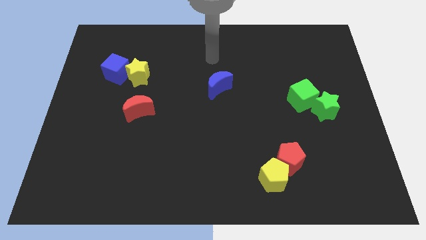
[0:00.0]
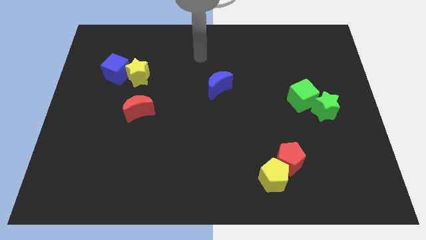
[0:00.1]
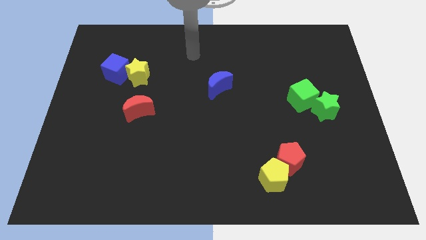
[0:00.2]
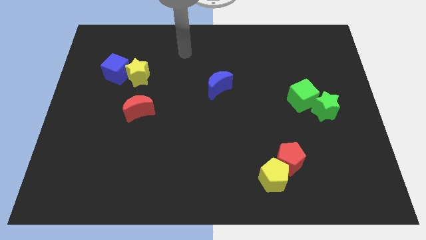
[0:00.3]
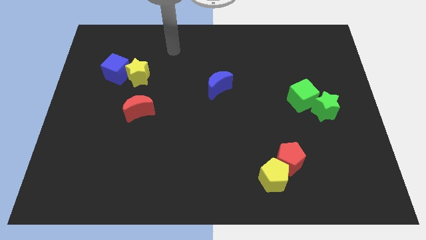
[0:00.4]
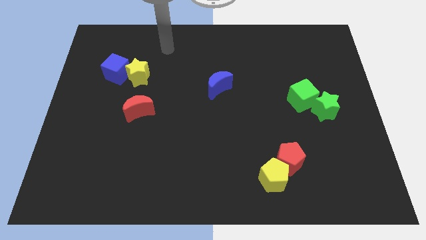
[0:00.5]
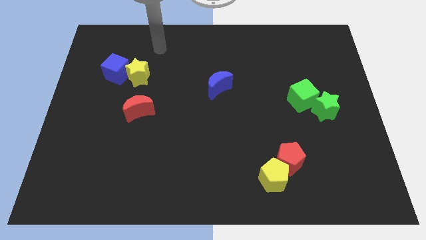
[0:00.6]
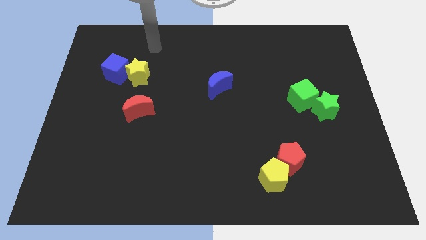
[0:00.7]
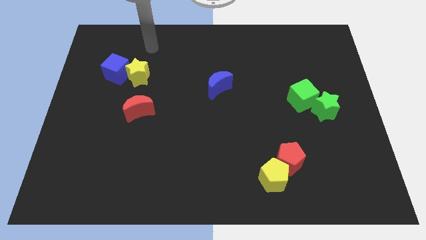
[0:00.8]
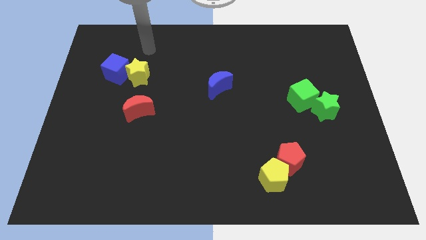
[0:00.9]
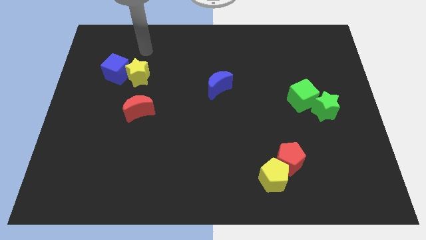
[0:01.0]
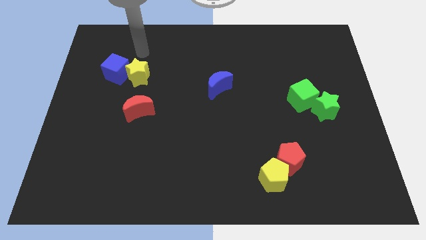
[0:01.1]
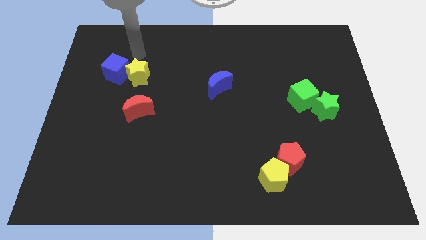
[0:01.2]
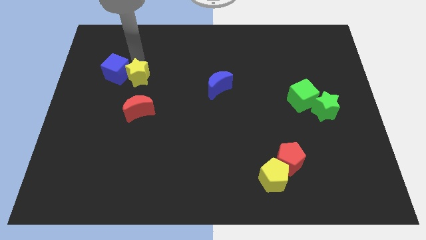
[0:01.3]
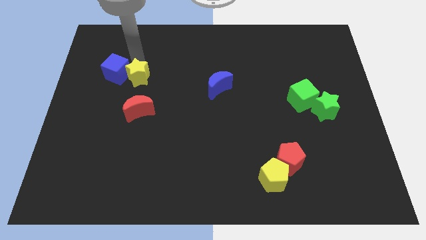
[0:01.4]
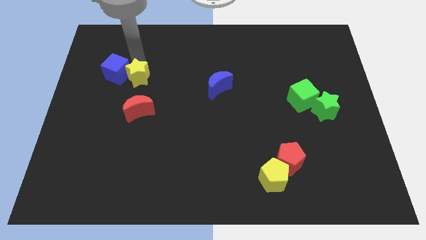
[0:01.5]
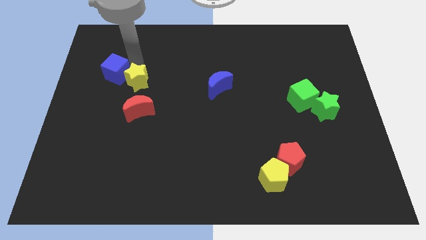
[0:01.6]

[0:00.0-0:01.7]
tap the yellow pentagon

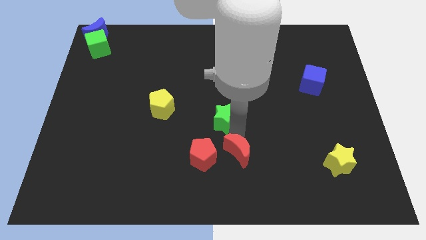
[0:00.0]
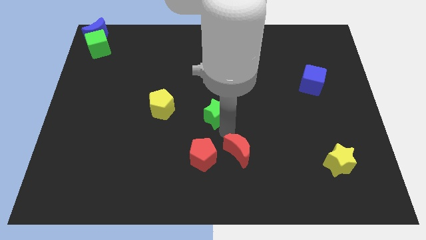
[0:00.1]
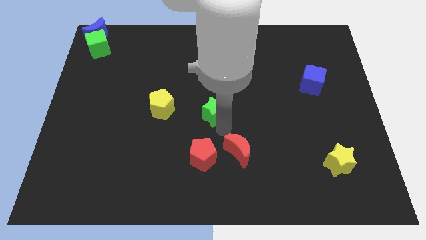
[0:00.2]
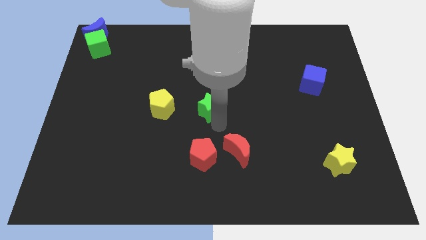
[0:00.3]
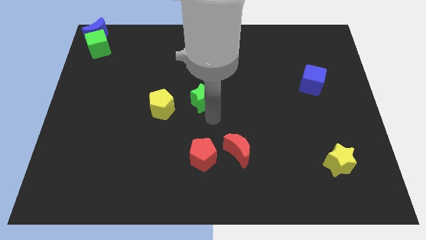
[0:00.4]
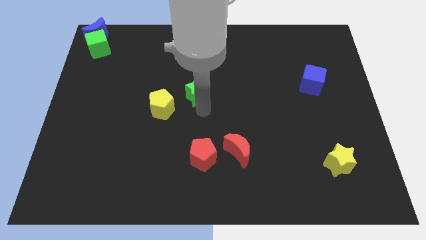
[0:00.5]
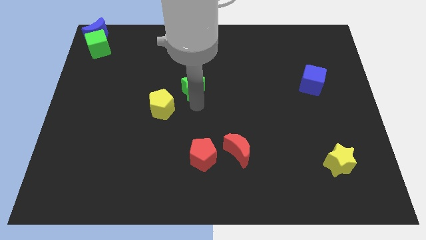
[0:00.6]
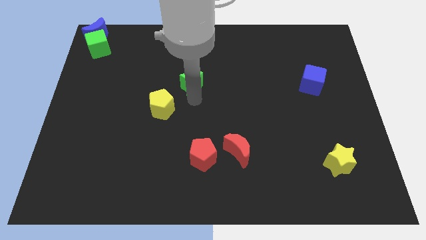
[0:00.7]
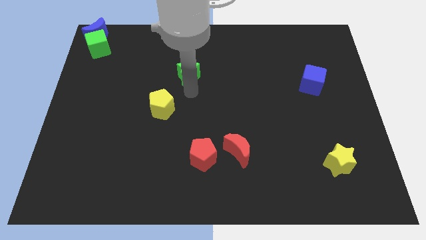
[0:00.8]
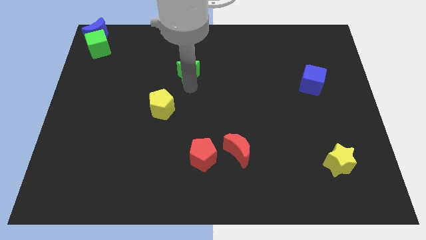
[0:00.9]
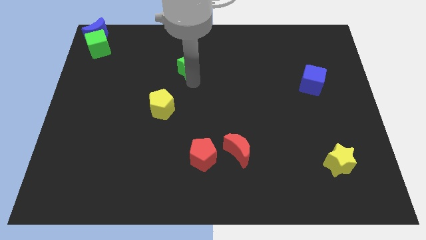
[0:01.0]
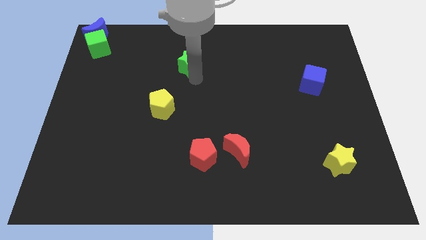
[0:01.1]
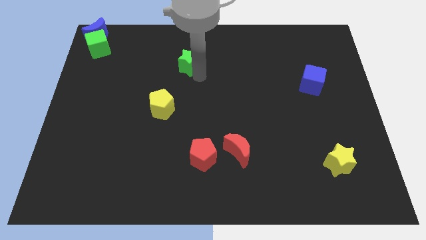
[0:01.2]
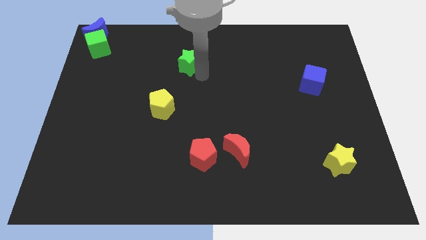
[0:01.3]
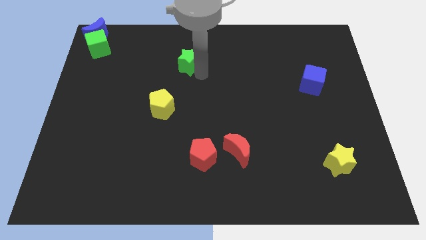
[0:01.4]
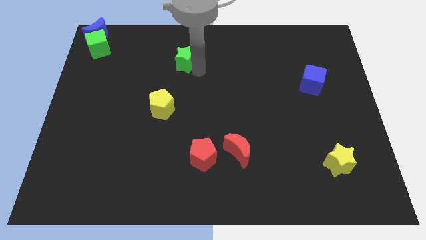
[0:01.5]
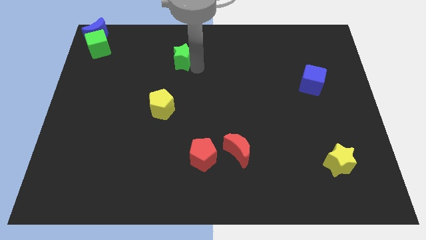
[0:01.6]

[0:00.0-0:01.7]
push the green star diagonally bottom right to the green cube

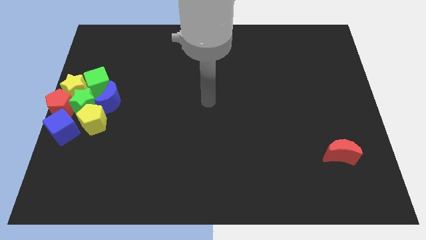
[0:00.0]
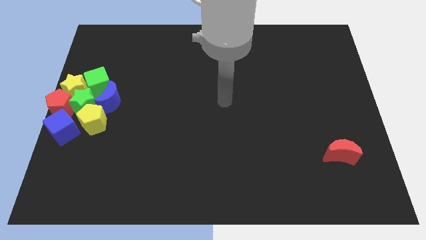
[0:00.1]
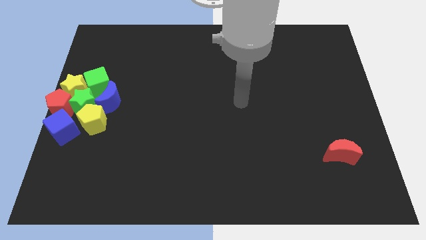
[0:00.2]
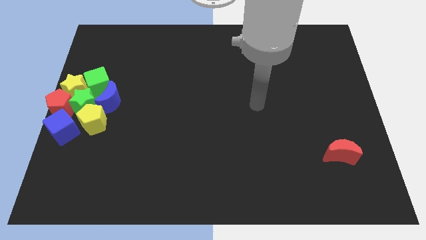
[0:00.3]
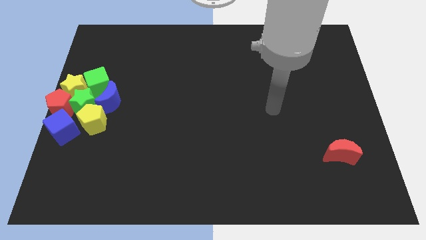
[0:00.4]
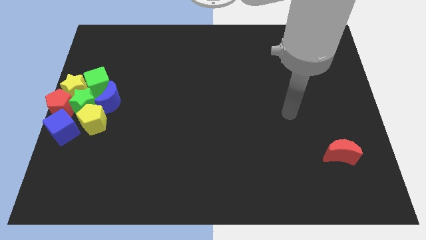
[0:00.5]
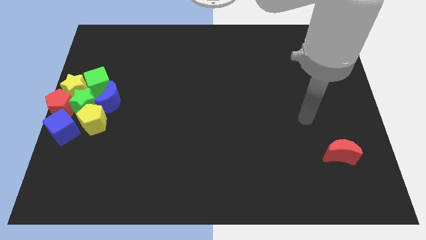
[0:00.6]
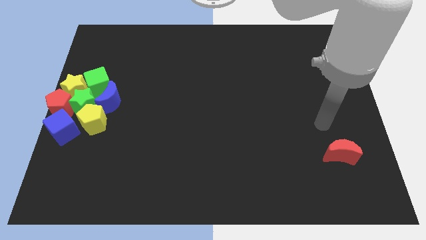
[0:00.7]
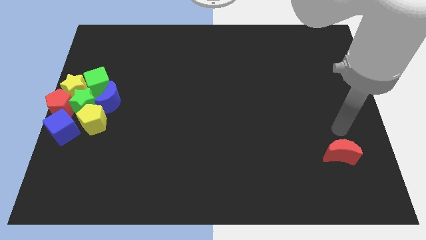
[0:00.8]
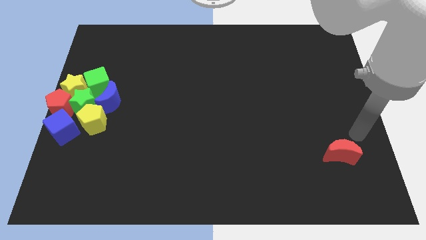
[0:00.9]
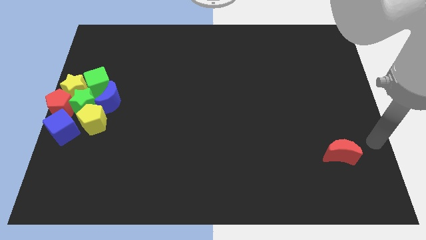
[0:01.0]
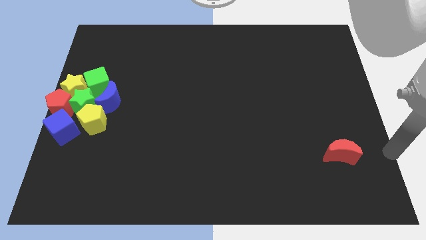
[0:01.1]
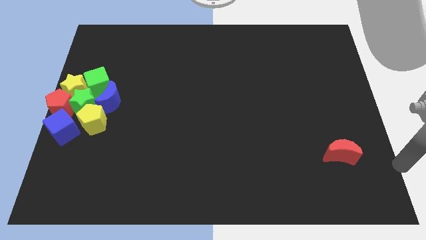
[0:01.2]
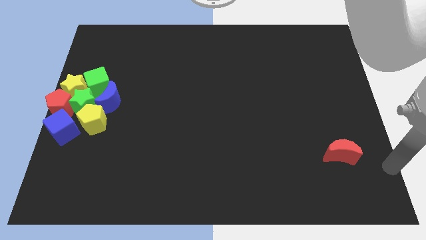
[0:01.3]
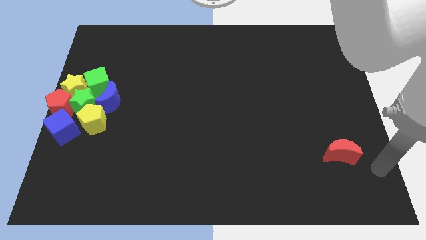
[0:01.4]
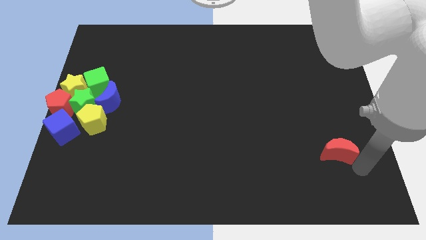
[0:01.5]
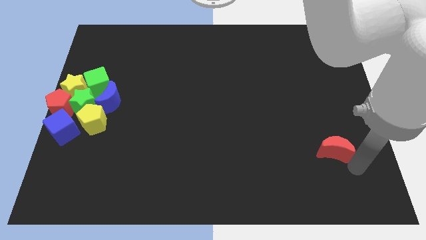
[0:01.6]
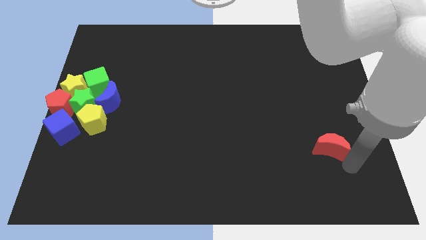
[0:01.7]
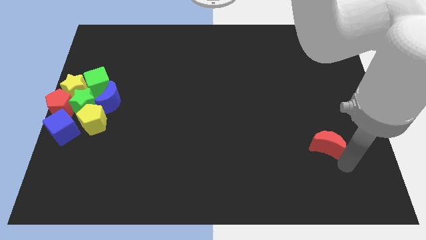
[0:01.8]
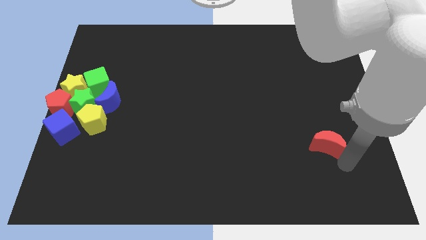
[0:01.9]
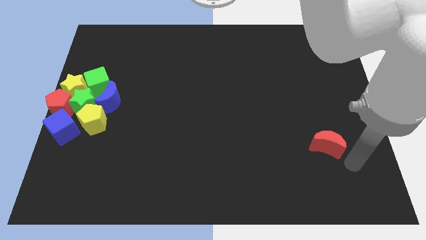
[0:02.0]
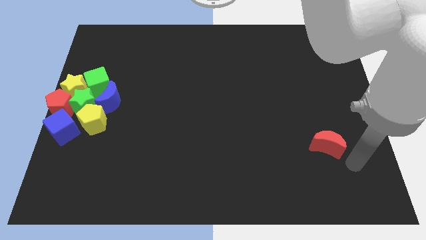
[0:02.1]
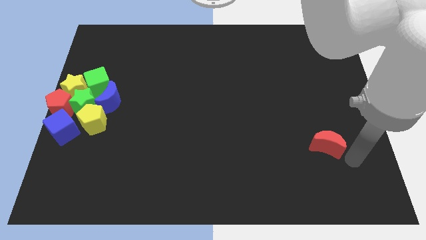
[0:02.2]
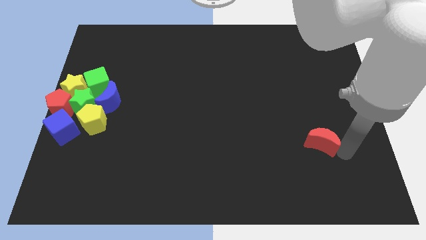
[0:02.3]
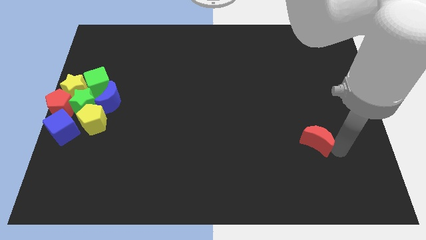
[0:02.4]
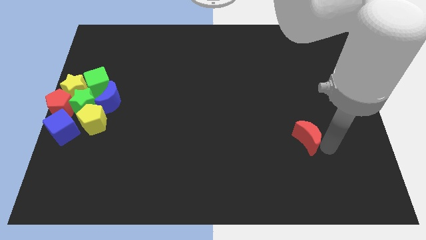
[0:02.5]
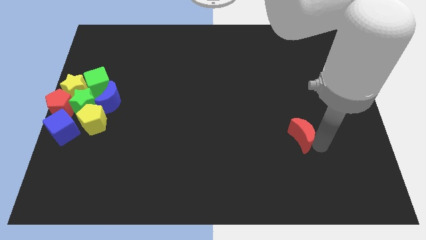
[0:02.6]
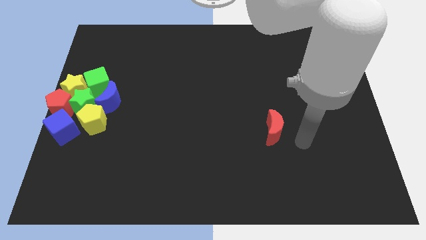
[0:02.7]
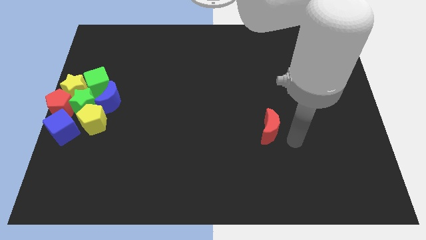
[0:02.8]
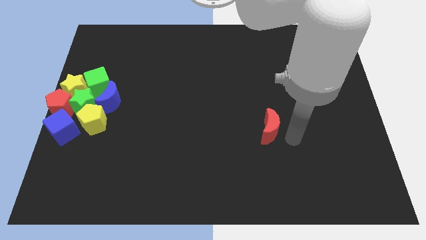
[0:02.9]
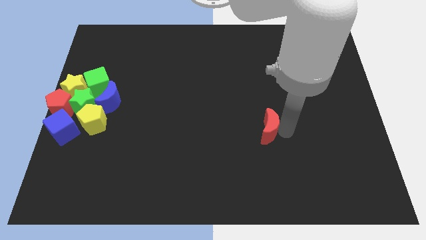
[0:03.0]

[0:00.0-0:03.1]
drag the red crescent towards the top left side of the board

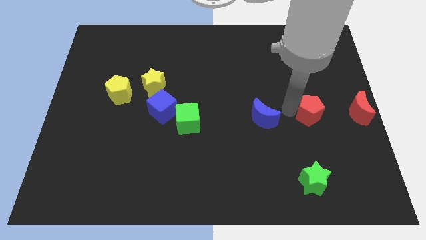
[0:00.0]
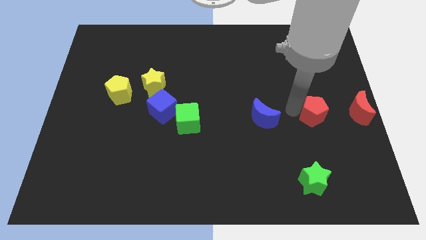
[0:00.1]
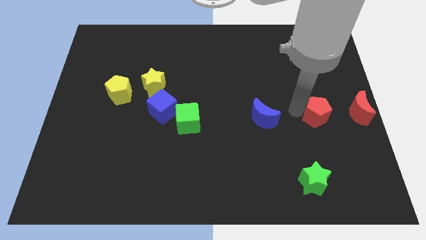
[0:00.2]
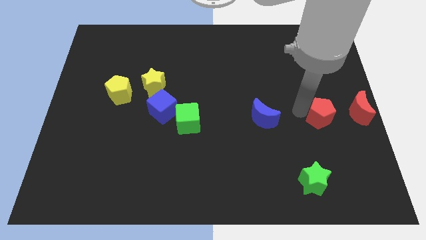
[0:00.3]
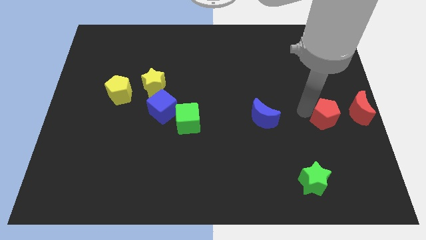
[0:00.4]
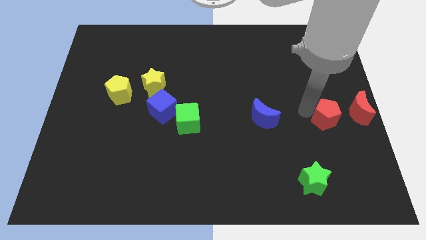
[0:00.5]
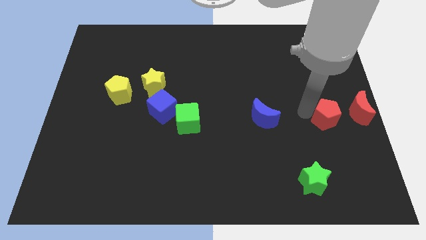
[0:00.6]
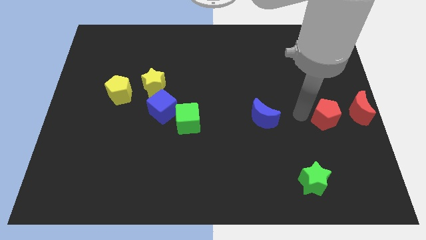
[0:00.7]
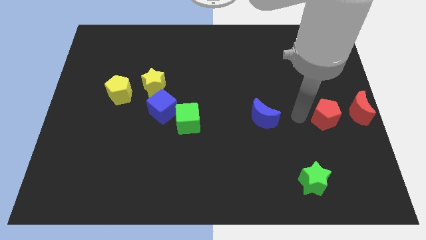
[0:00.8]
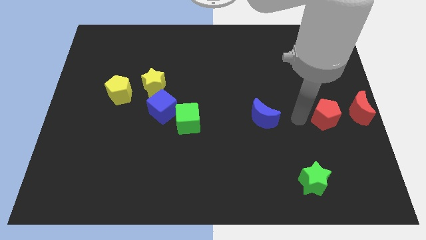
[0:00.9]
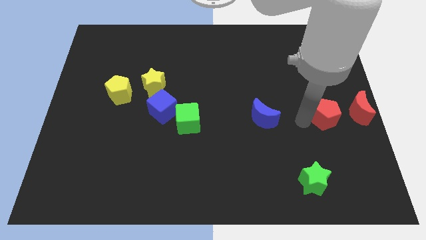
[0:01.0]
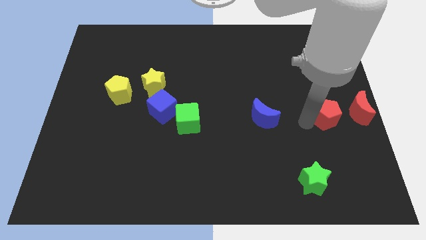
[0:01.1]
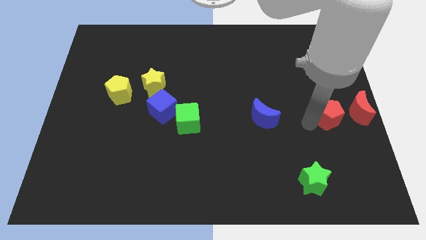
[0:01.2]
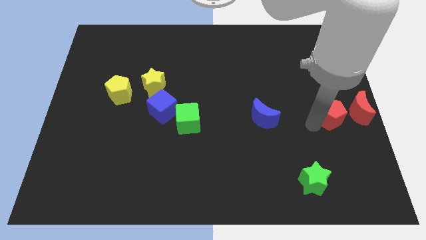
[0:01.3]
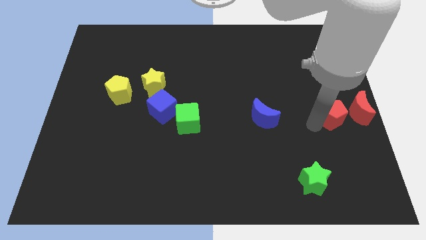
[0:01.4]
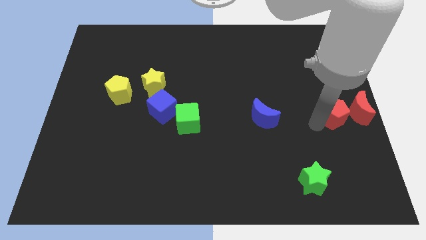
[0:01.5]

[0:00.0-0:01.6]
move red pentagon slightly to the right

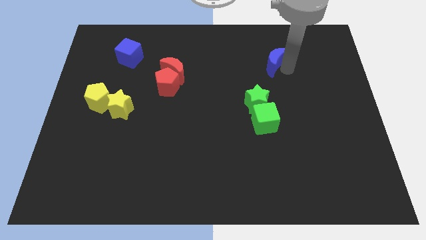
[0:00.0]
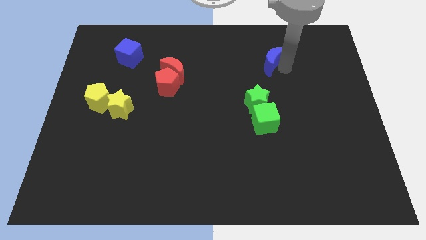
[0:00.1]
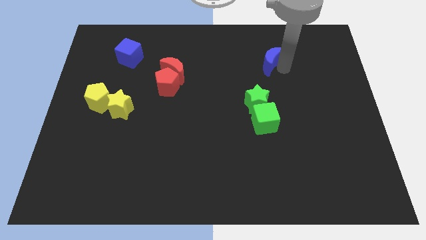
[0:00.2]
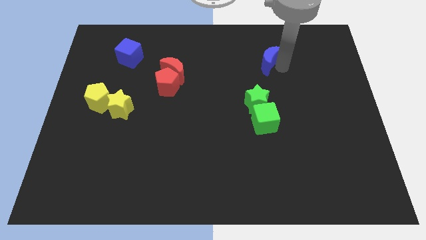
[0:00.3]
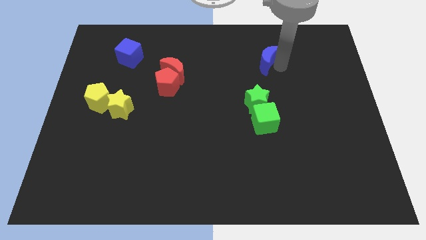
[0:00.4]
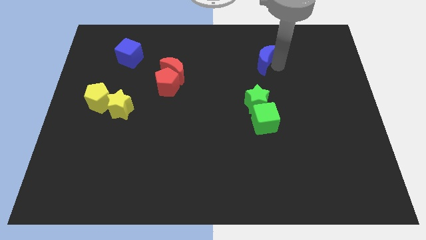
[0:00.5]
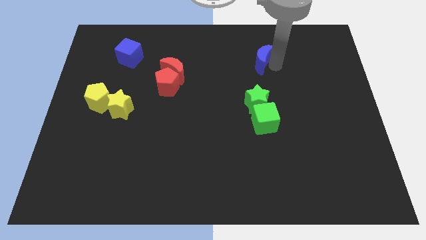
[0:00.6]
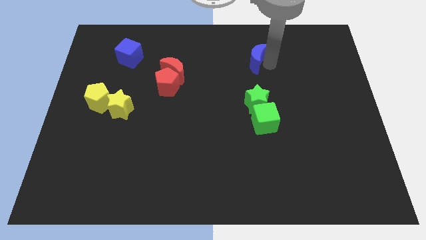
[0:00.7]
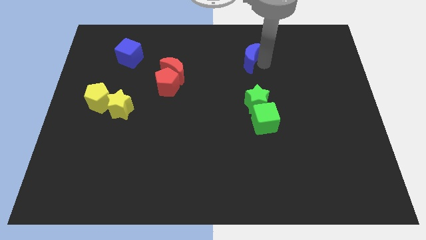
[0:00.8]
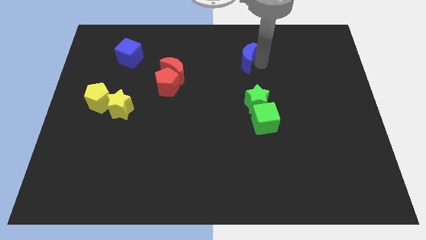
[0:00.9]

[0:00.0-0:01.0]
move blue moon to the top of green star
